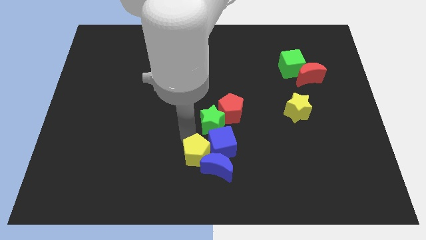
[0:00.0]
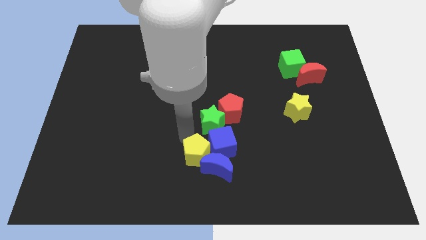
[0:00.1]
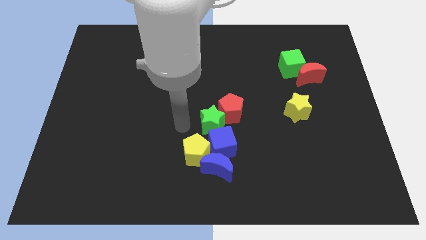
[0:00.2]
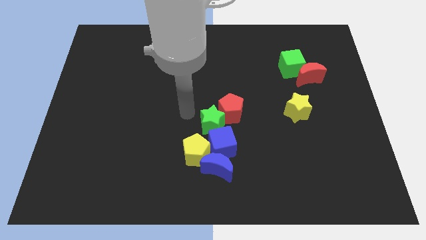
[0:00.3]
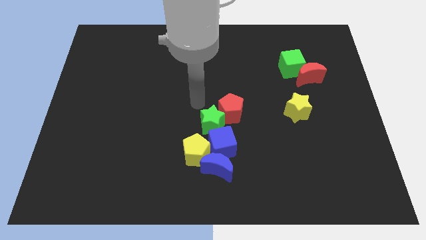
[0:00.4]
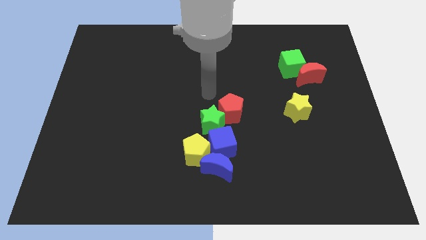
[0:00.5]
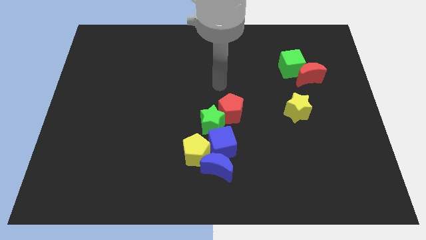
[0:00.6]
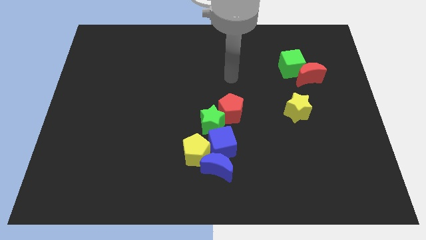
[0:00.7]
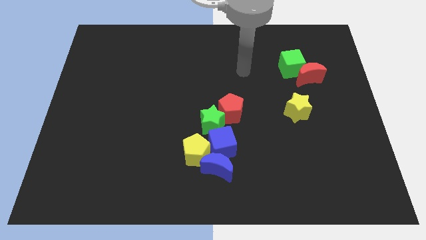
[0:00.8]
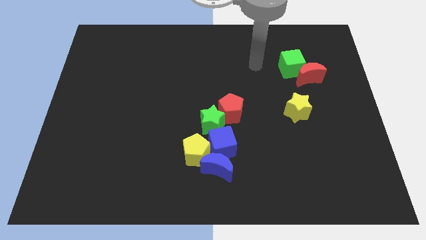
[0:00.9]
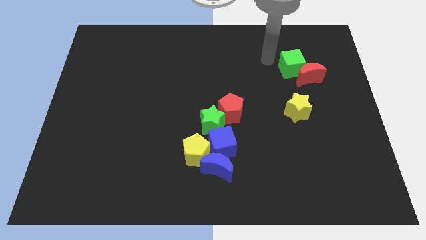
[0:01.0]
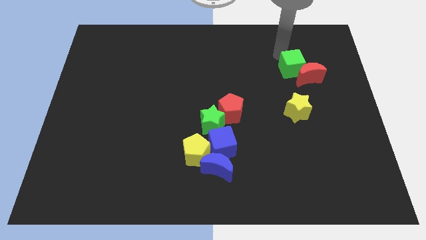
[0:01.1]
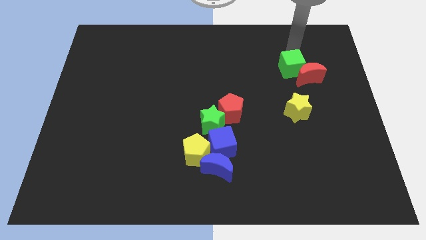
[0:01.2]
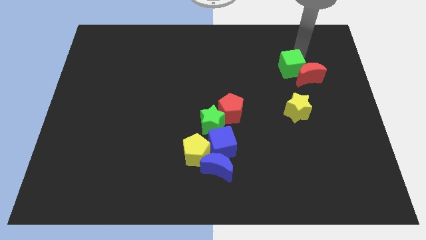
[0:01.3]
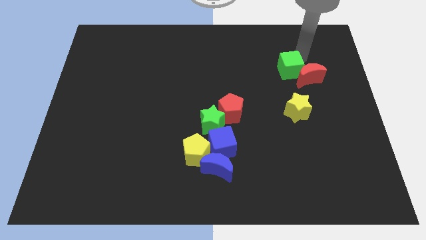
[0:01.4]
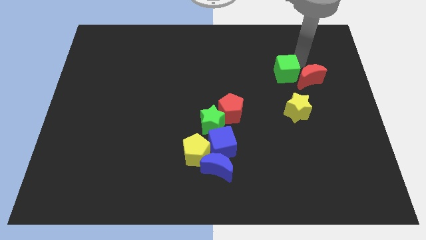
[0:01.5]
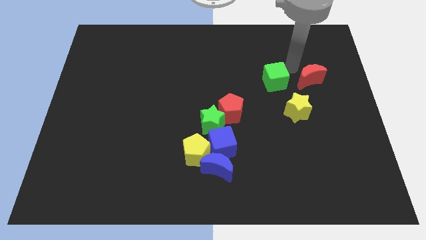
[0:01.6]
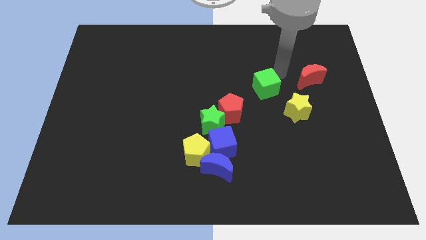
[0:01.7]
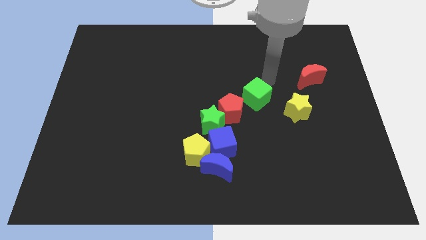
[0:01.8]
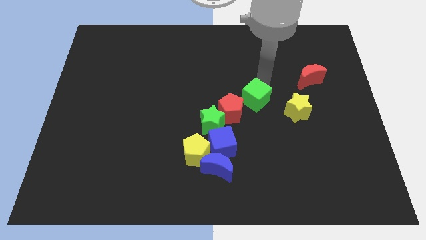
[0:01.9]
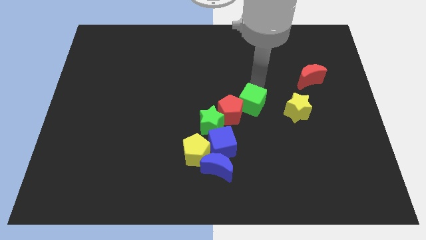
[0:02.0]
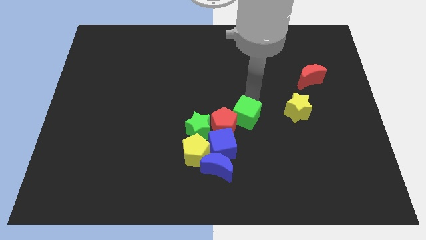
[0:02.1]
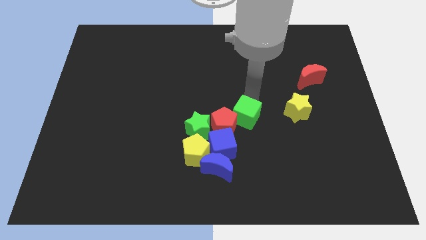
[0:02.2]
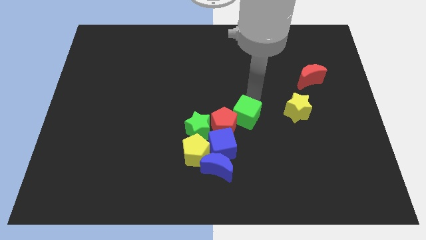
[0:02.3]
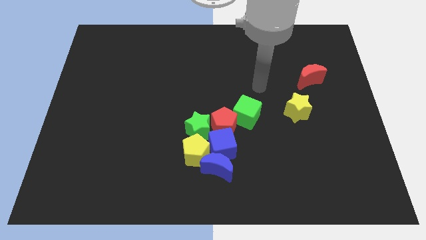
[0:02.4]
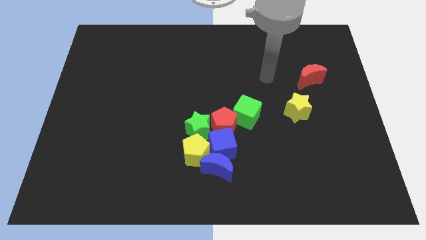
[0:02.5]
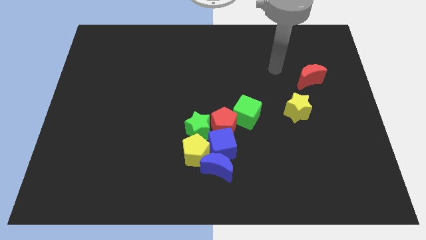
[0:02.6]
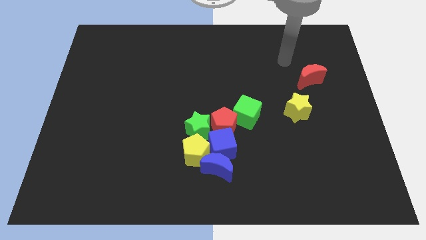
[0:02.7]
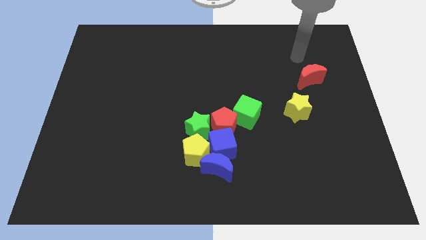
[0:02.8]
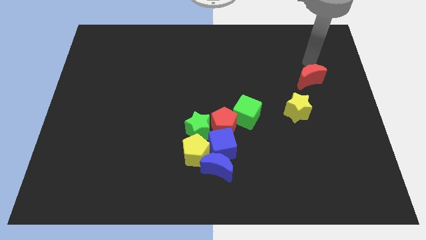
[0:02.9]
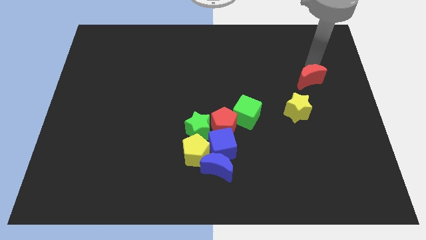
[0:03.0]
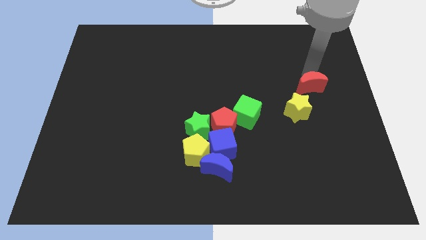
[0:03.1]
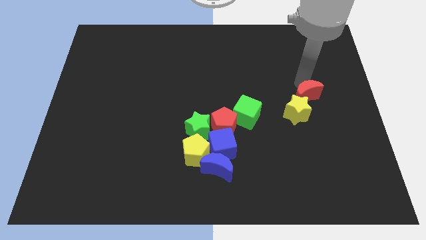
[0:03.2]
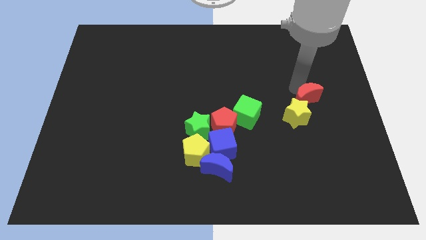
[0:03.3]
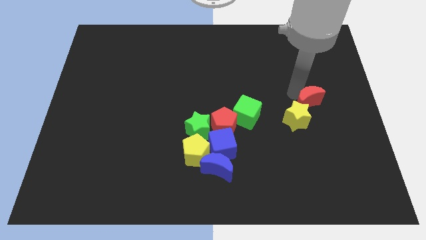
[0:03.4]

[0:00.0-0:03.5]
separate the green cube and the red moon

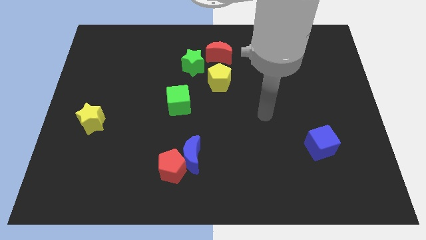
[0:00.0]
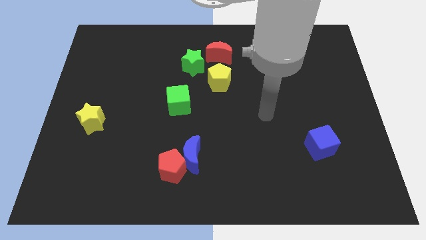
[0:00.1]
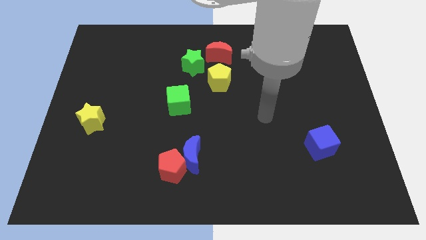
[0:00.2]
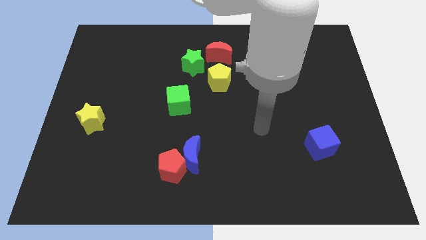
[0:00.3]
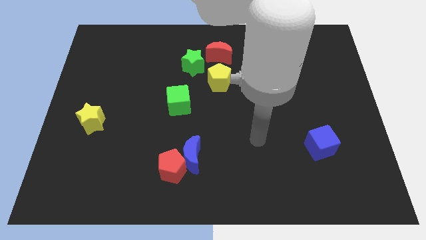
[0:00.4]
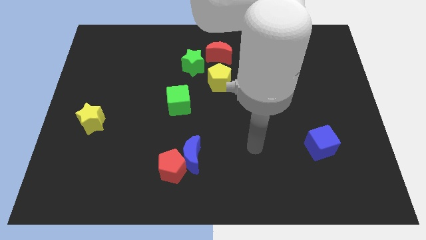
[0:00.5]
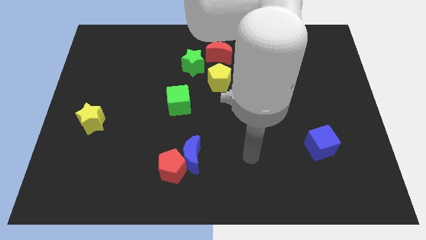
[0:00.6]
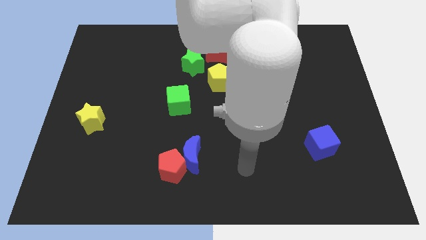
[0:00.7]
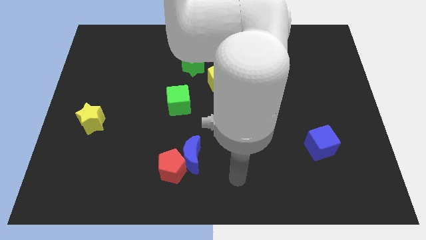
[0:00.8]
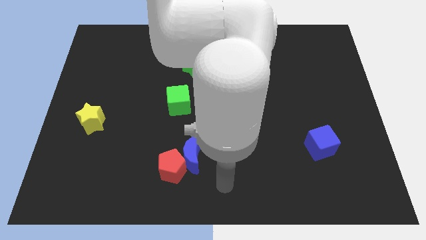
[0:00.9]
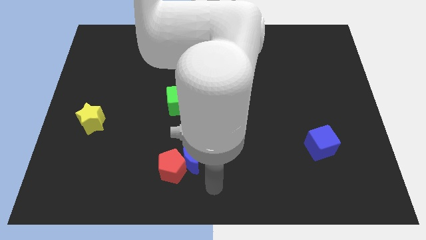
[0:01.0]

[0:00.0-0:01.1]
move your arm at the bottom center of the board

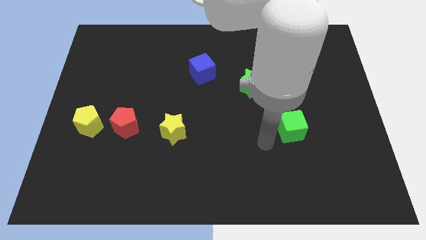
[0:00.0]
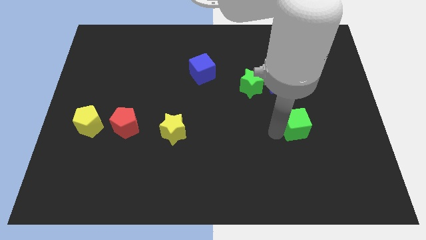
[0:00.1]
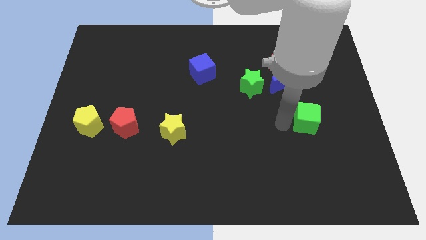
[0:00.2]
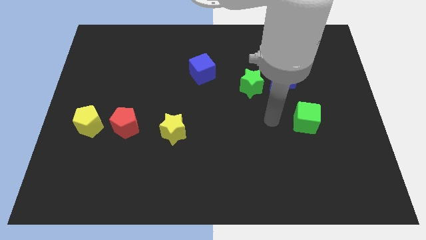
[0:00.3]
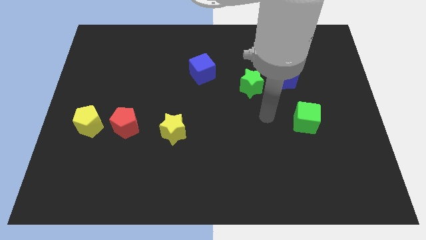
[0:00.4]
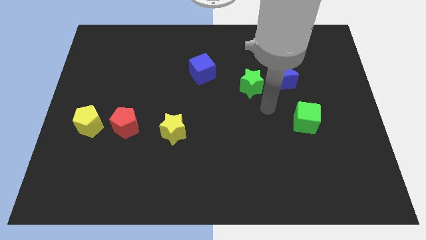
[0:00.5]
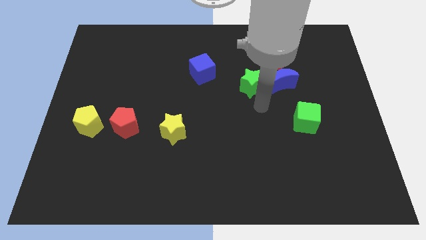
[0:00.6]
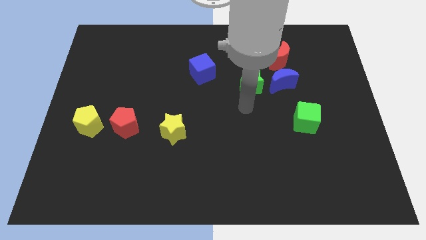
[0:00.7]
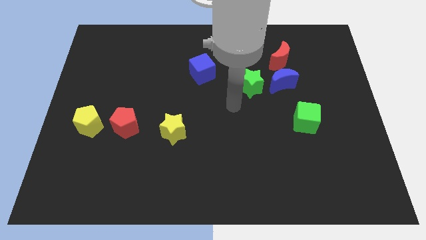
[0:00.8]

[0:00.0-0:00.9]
move green cube towards right middle of the board

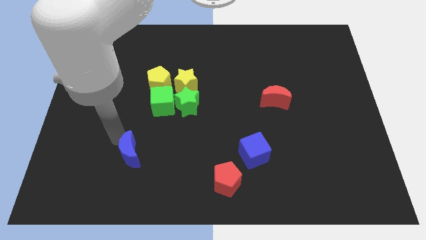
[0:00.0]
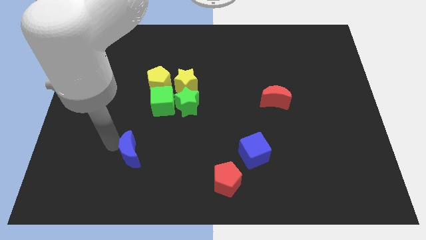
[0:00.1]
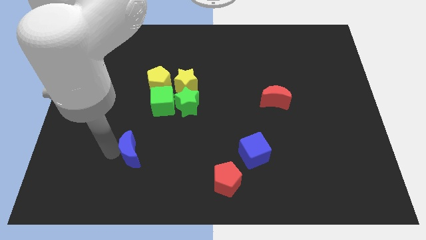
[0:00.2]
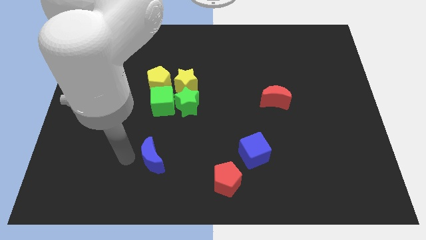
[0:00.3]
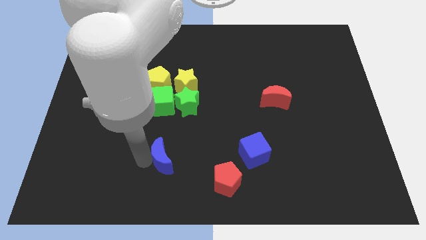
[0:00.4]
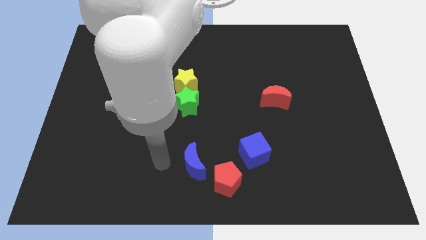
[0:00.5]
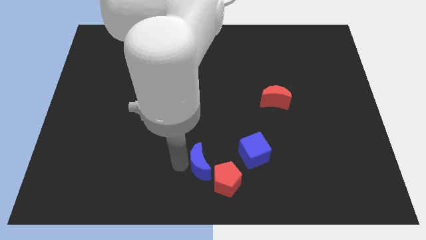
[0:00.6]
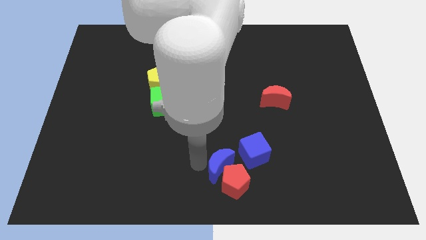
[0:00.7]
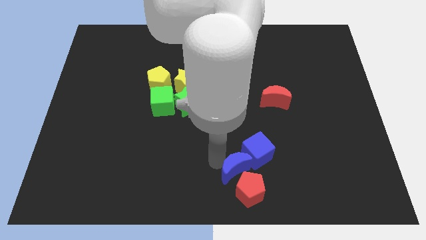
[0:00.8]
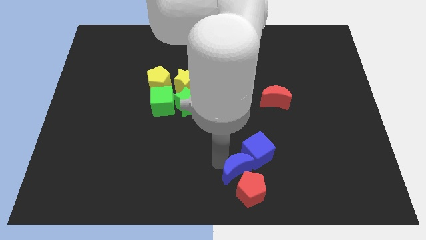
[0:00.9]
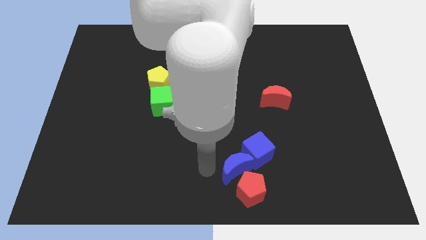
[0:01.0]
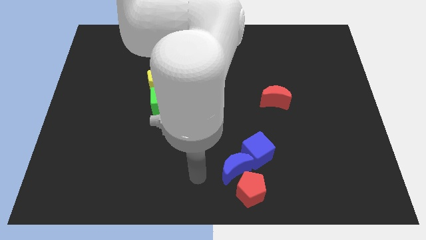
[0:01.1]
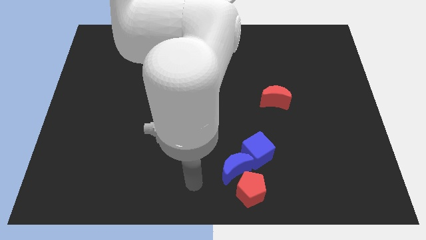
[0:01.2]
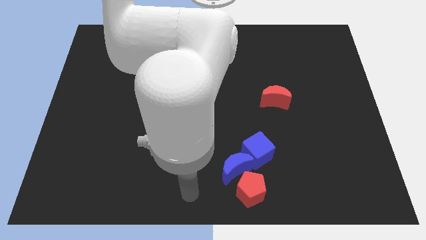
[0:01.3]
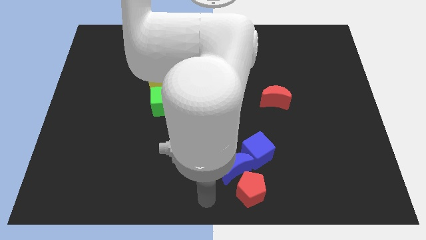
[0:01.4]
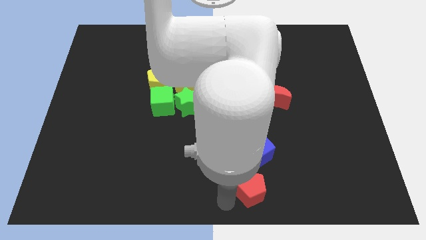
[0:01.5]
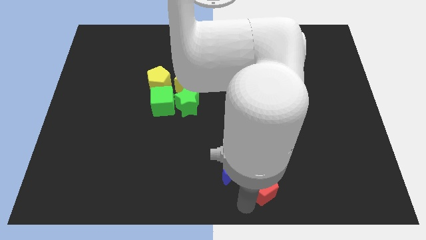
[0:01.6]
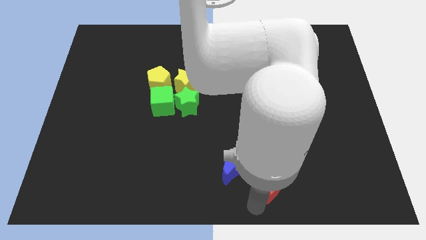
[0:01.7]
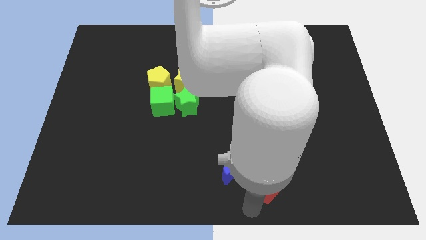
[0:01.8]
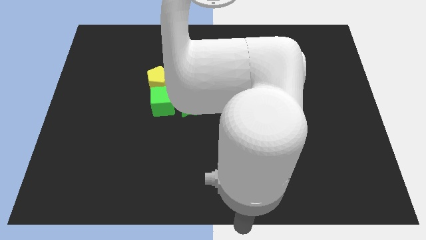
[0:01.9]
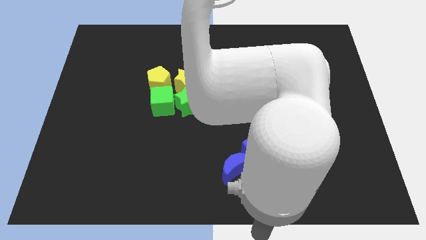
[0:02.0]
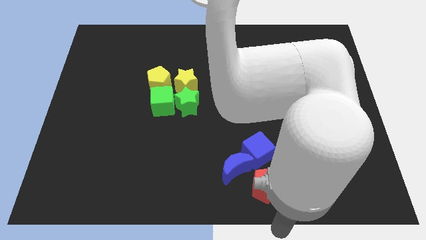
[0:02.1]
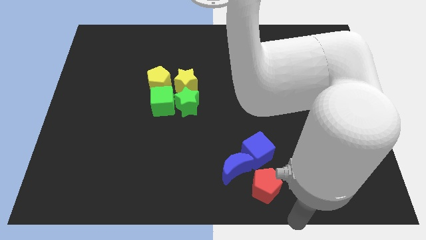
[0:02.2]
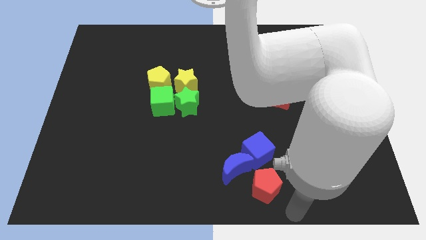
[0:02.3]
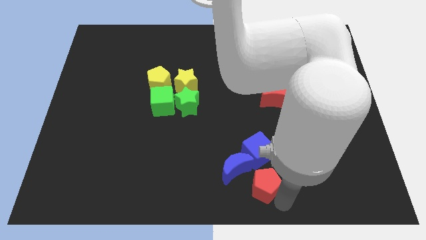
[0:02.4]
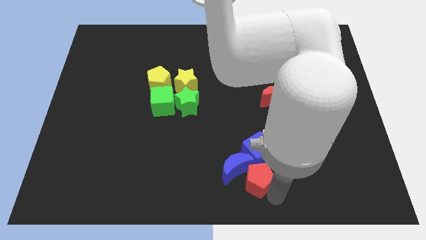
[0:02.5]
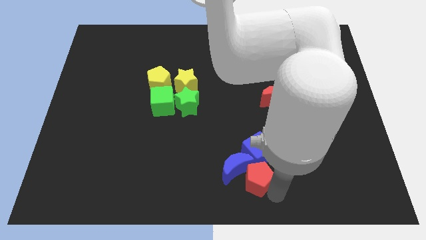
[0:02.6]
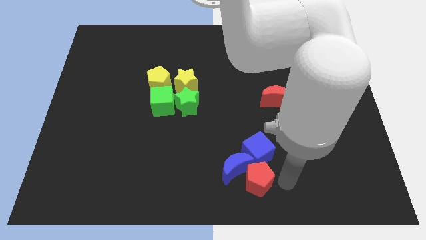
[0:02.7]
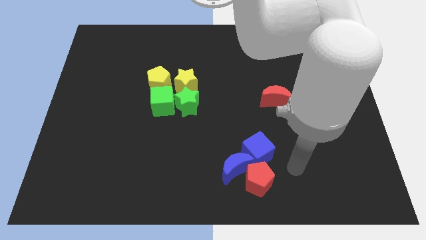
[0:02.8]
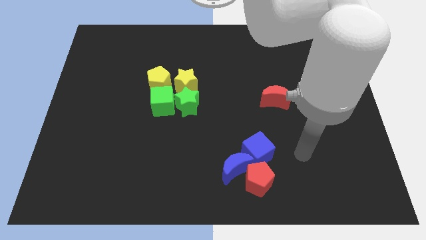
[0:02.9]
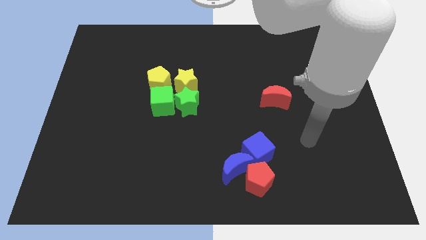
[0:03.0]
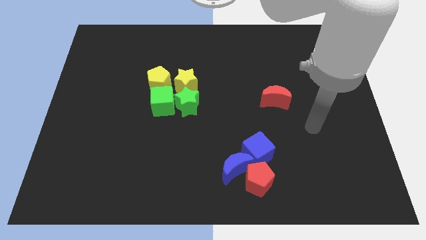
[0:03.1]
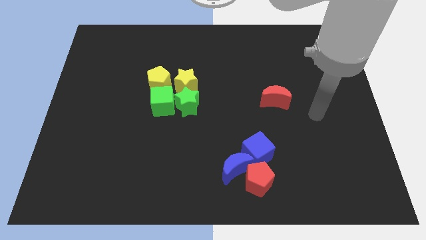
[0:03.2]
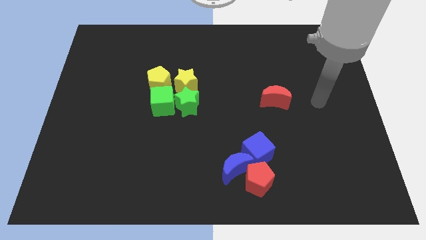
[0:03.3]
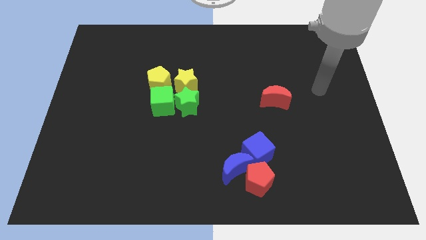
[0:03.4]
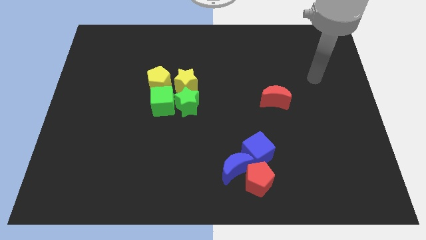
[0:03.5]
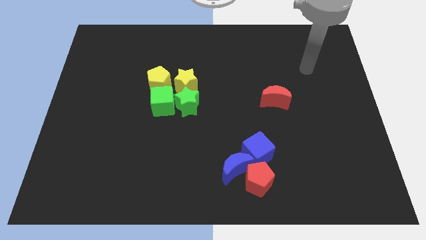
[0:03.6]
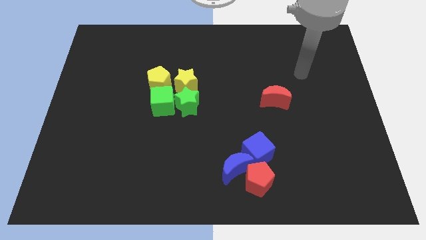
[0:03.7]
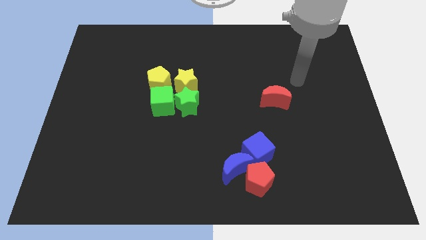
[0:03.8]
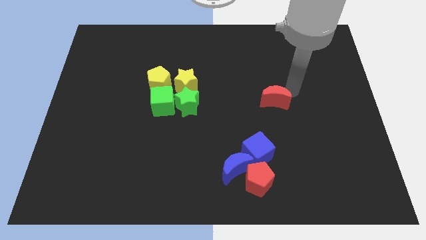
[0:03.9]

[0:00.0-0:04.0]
push red pentagon into the group of blue moon and blue cube
